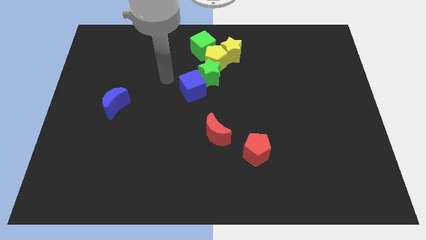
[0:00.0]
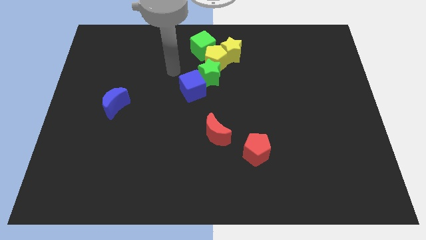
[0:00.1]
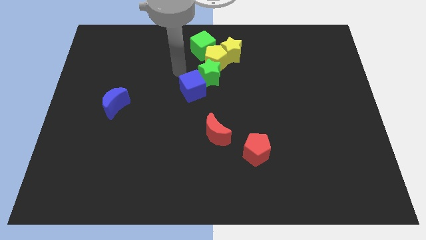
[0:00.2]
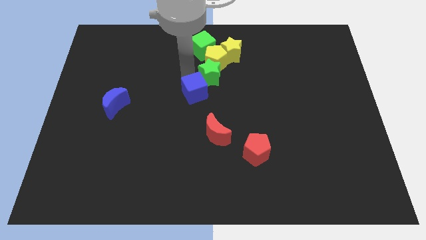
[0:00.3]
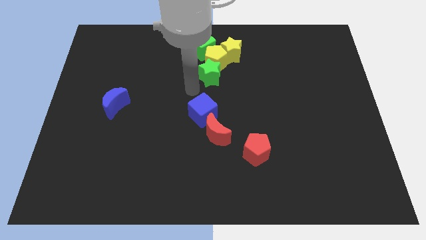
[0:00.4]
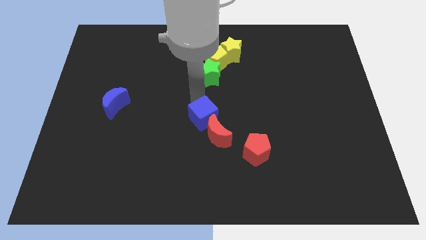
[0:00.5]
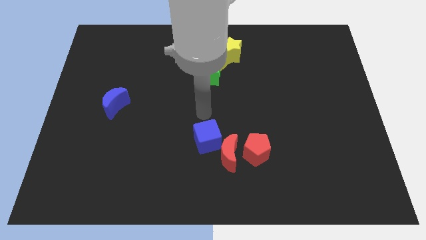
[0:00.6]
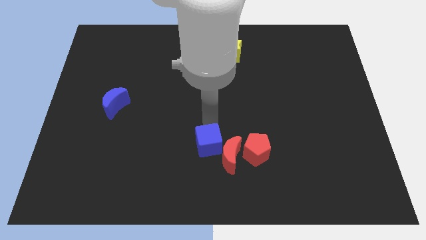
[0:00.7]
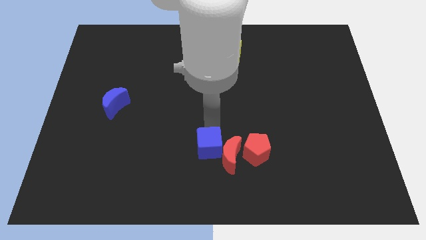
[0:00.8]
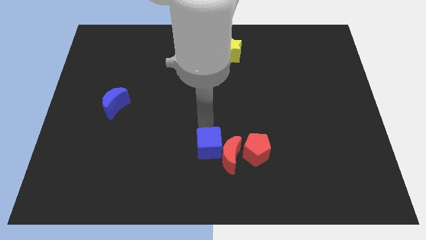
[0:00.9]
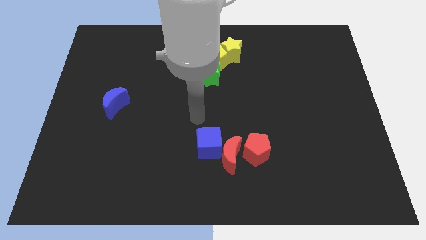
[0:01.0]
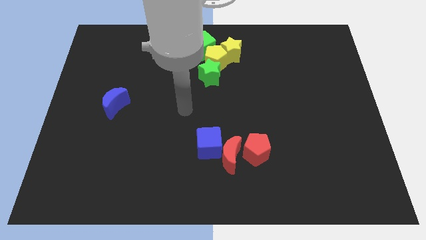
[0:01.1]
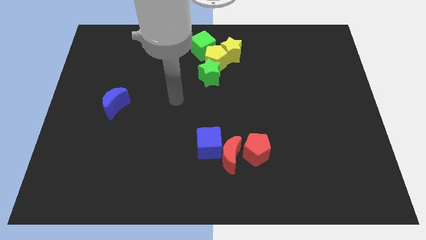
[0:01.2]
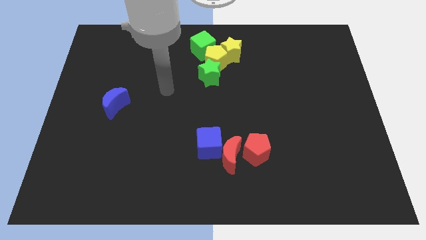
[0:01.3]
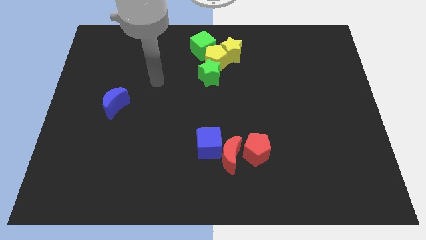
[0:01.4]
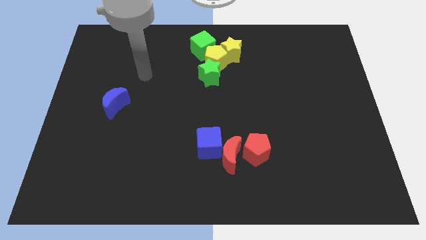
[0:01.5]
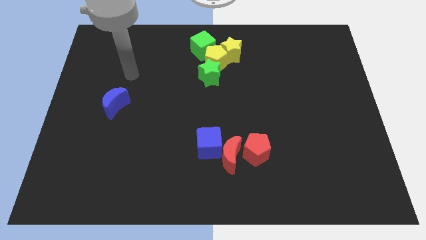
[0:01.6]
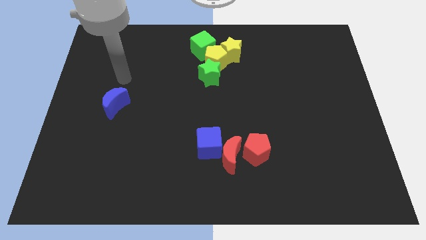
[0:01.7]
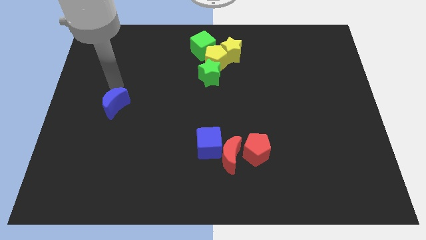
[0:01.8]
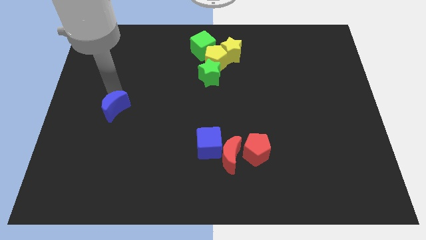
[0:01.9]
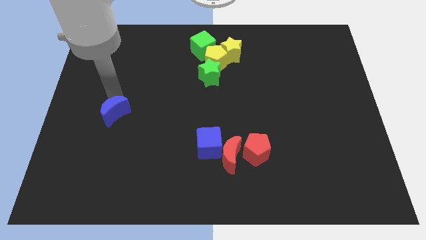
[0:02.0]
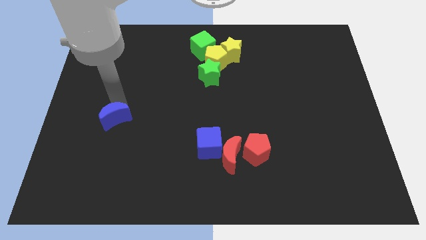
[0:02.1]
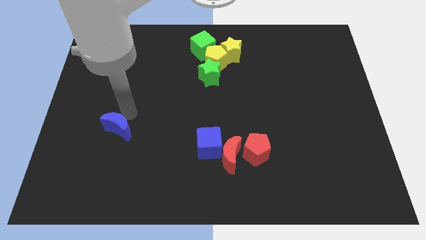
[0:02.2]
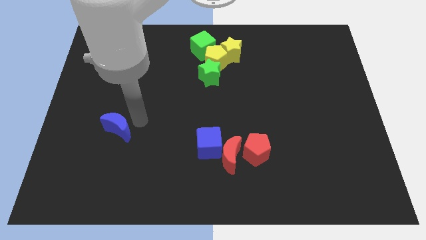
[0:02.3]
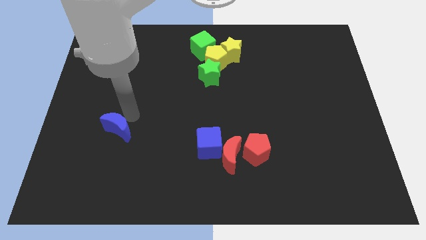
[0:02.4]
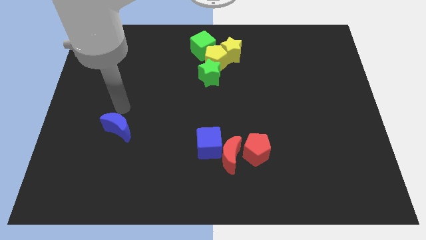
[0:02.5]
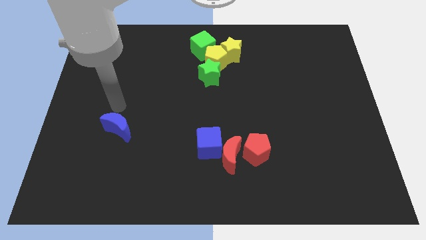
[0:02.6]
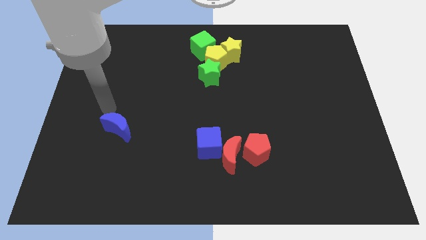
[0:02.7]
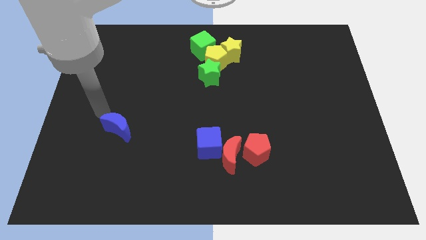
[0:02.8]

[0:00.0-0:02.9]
push the blue cube left to the red moon

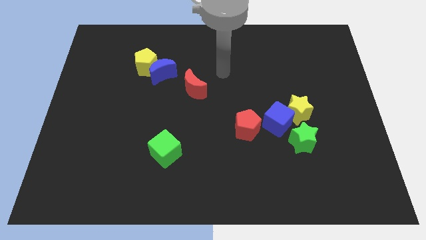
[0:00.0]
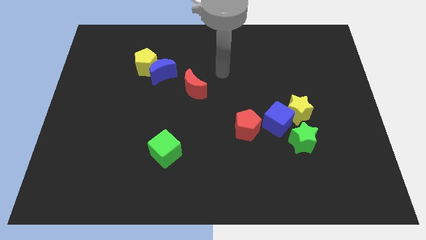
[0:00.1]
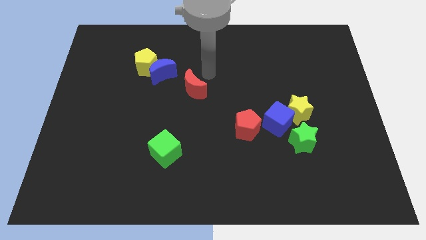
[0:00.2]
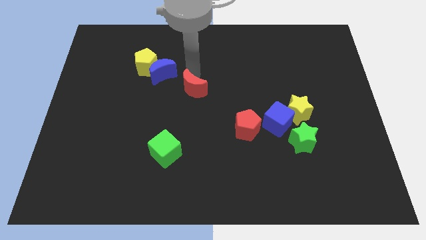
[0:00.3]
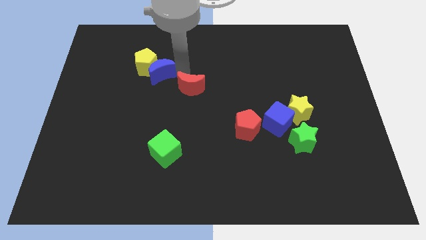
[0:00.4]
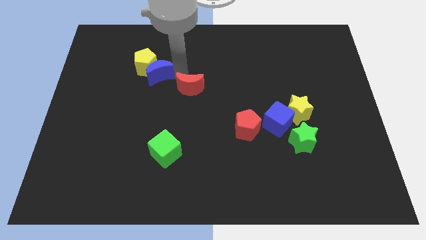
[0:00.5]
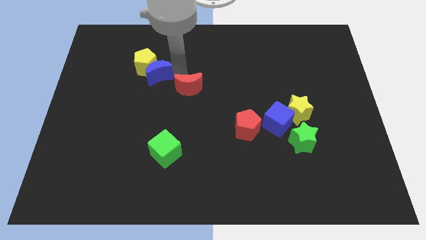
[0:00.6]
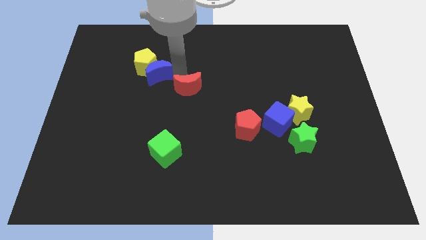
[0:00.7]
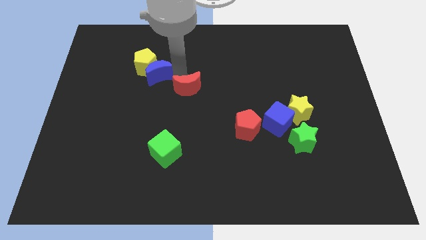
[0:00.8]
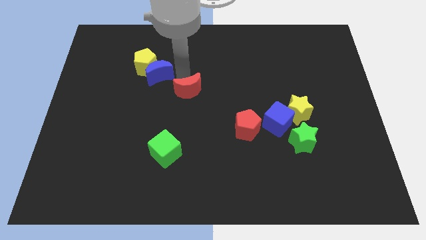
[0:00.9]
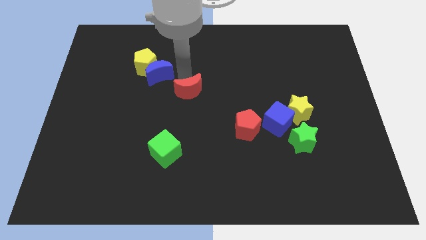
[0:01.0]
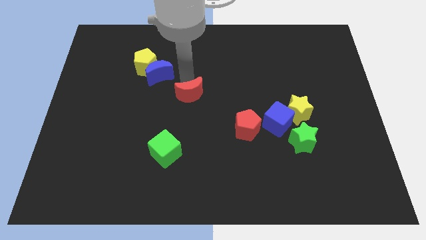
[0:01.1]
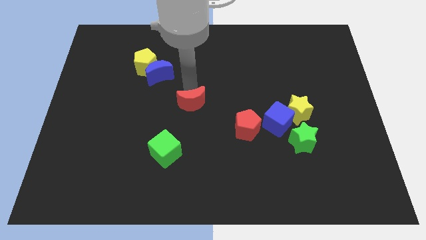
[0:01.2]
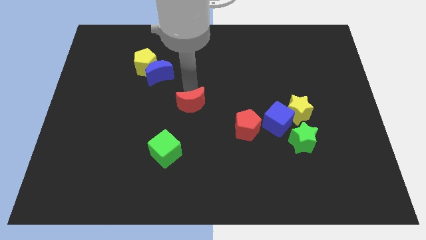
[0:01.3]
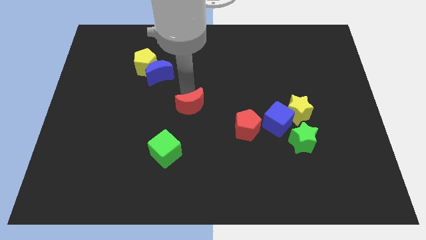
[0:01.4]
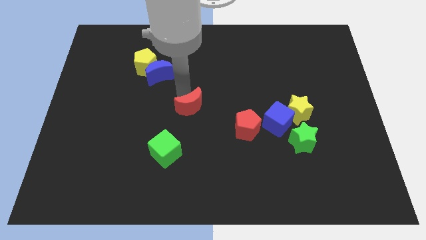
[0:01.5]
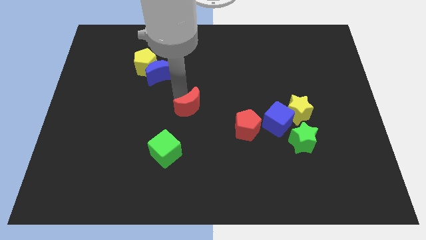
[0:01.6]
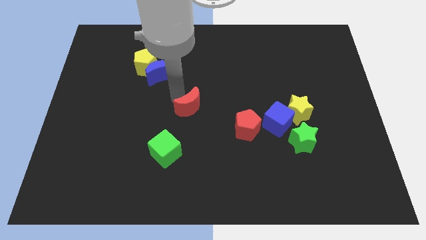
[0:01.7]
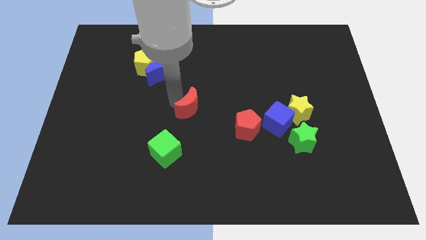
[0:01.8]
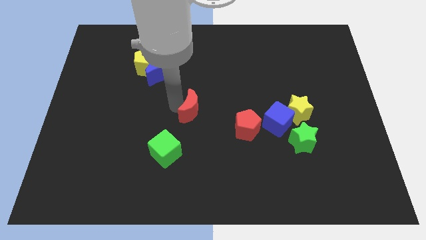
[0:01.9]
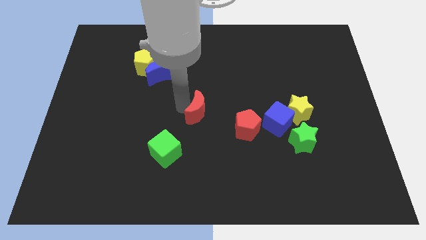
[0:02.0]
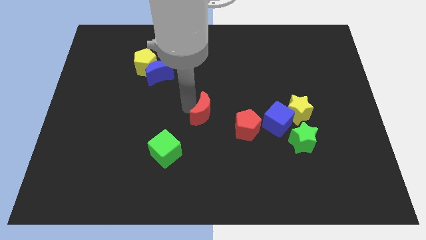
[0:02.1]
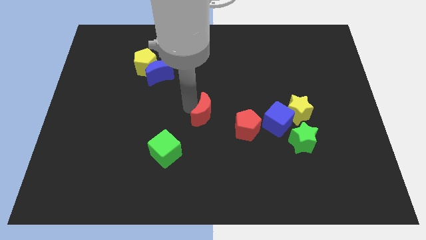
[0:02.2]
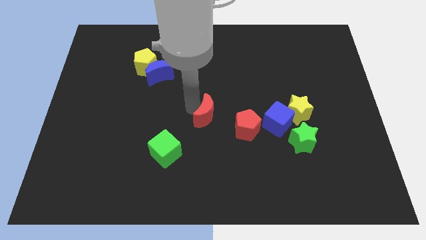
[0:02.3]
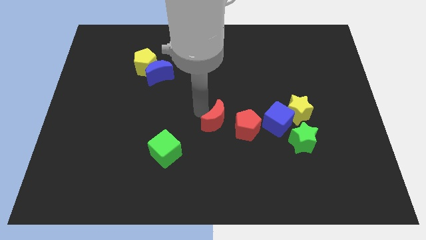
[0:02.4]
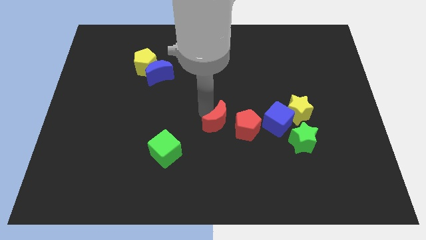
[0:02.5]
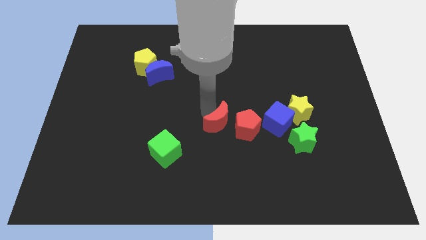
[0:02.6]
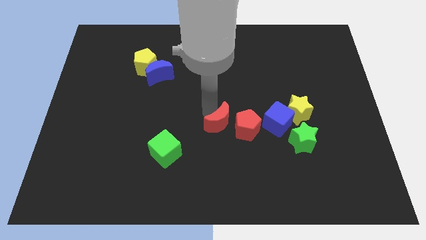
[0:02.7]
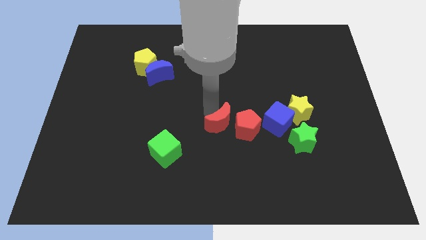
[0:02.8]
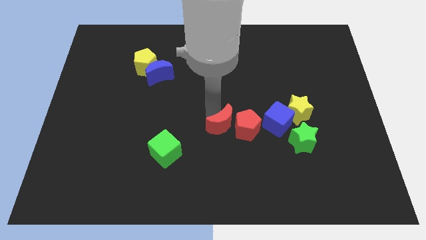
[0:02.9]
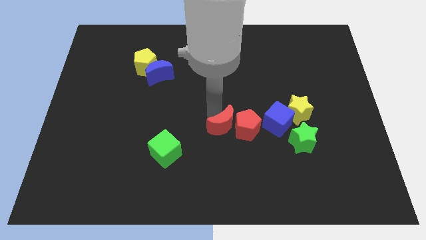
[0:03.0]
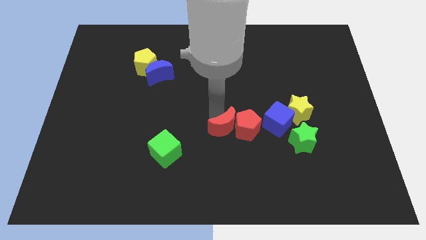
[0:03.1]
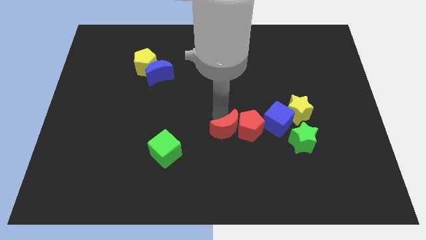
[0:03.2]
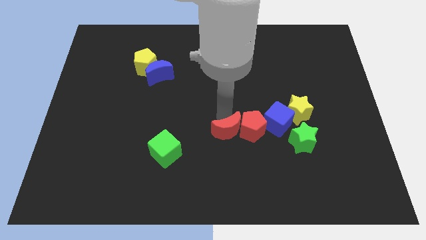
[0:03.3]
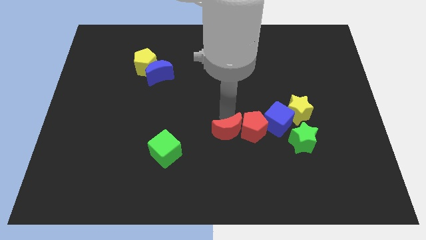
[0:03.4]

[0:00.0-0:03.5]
push the red crescent into the red pentagon

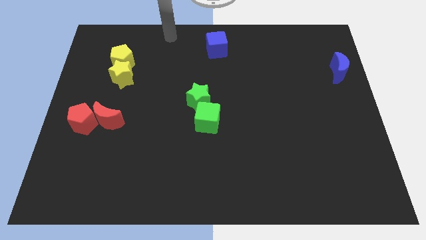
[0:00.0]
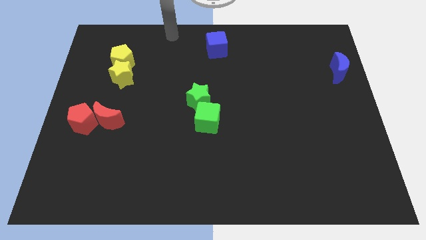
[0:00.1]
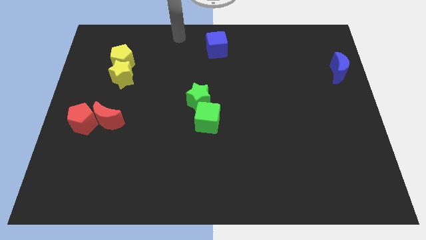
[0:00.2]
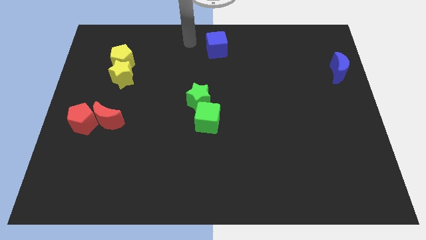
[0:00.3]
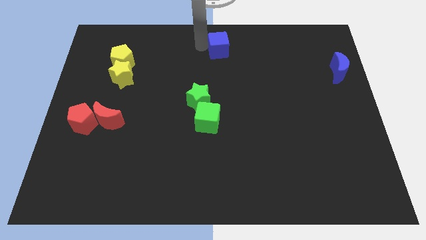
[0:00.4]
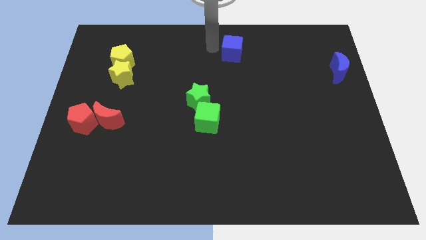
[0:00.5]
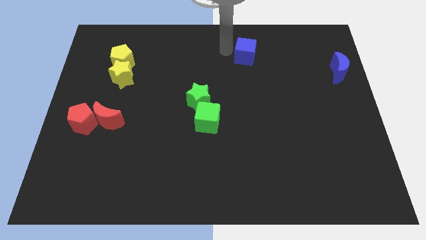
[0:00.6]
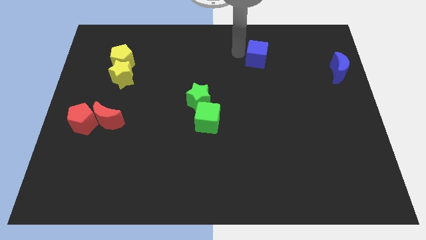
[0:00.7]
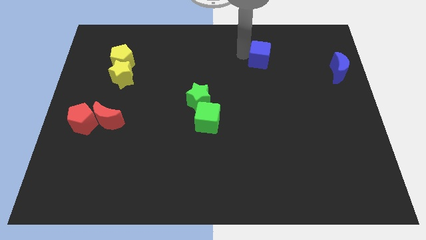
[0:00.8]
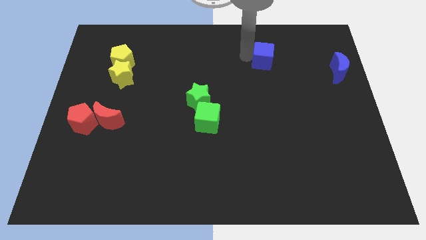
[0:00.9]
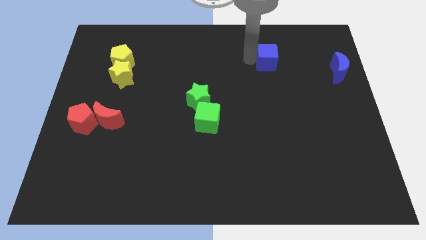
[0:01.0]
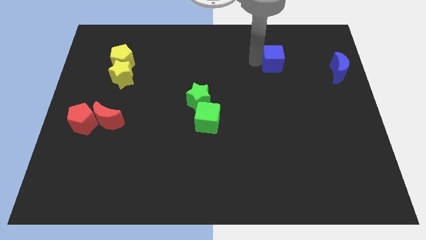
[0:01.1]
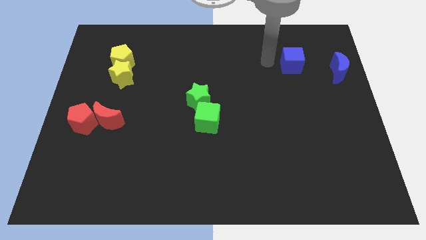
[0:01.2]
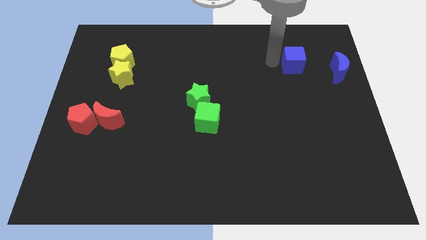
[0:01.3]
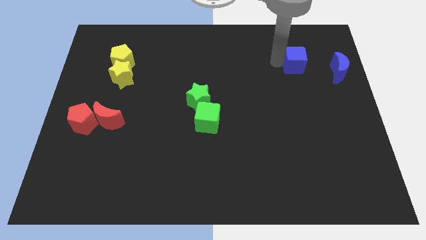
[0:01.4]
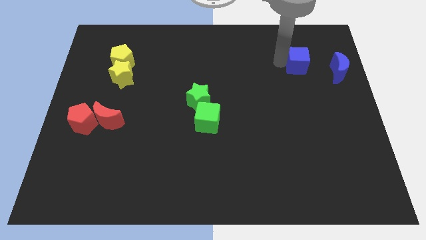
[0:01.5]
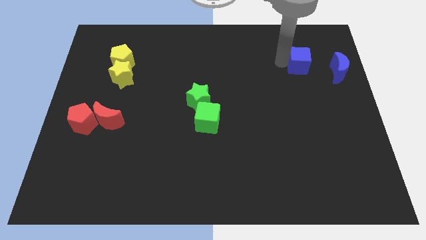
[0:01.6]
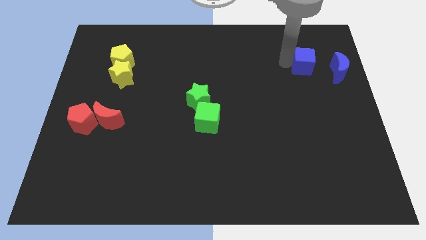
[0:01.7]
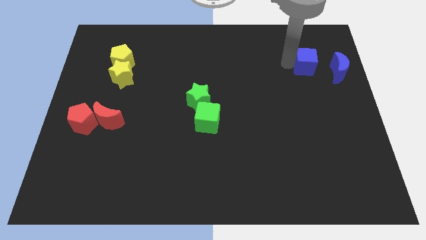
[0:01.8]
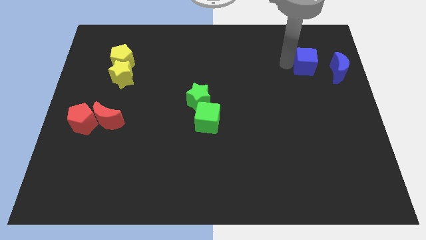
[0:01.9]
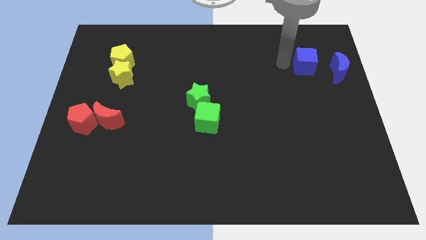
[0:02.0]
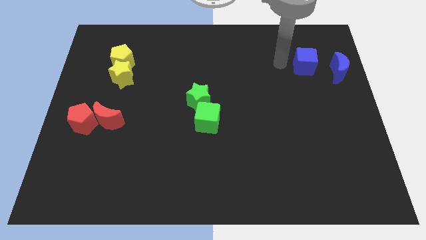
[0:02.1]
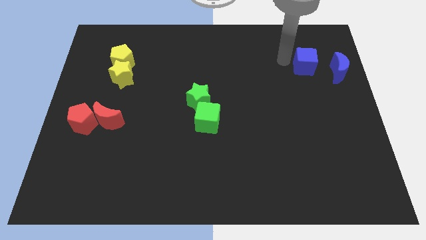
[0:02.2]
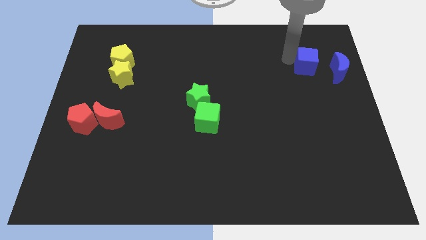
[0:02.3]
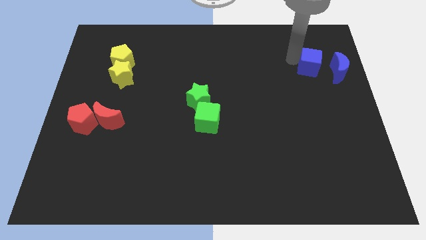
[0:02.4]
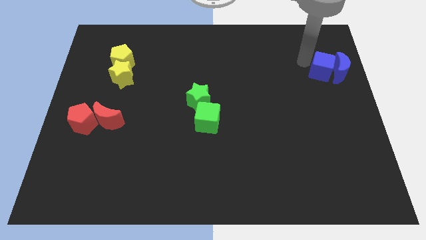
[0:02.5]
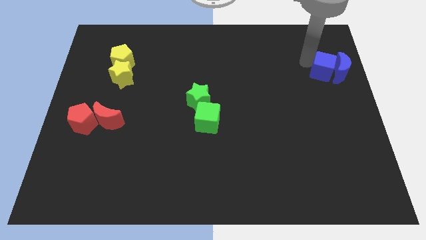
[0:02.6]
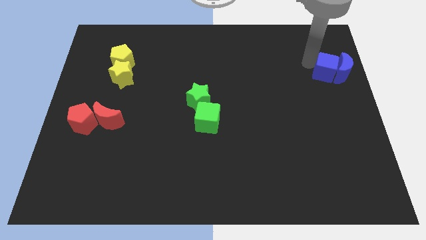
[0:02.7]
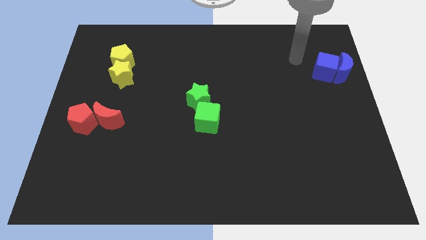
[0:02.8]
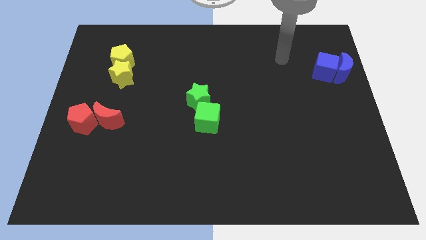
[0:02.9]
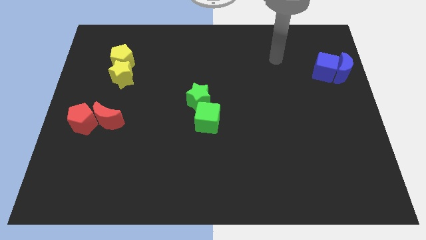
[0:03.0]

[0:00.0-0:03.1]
slide blue cube into blue moon
